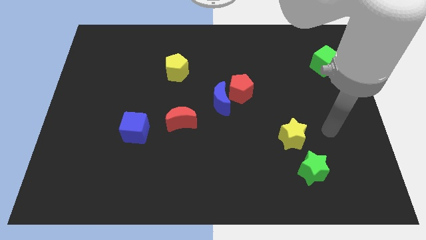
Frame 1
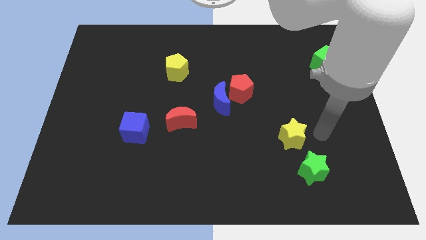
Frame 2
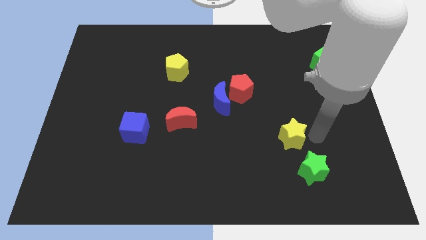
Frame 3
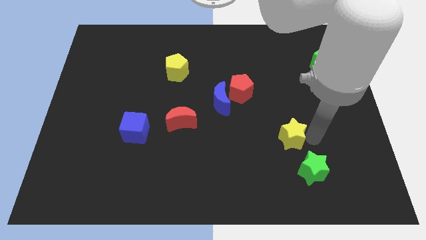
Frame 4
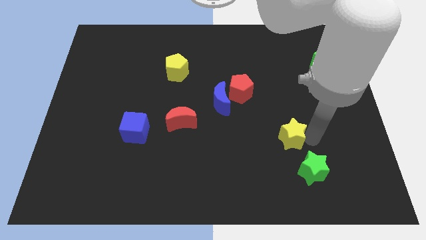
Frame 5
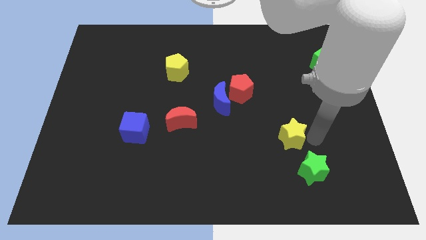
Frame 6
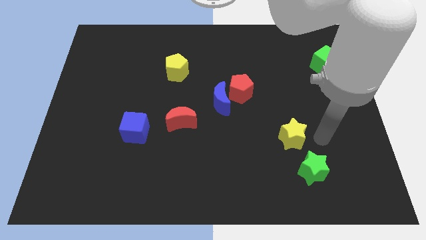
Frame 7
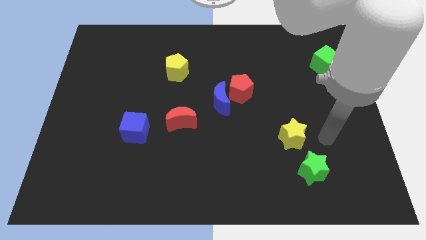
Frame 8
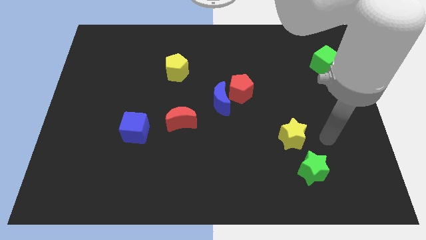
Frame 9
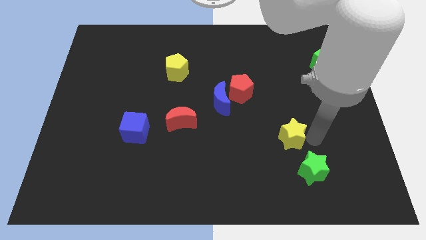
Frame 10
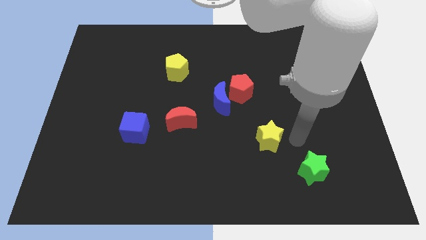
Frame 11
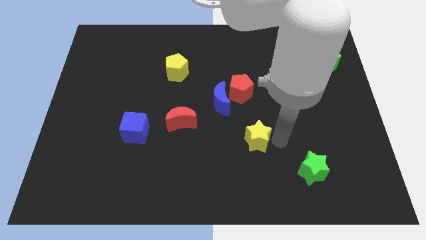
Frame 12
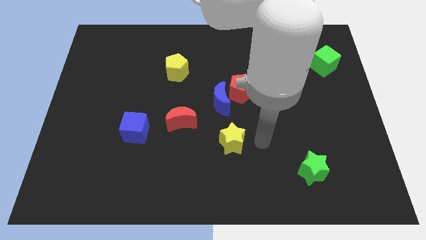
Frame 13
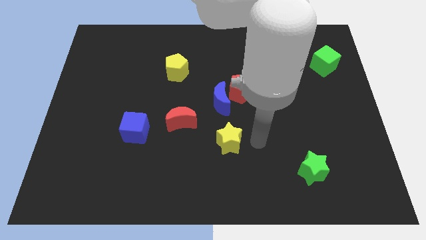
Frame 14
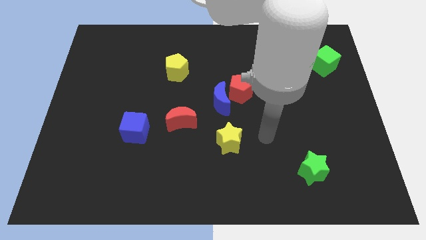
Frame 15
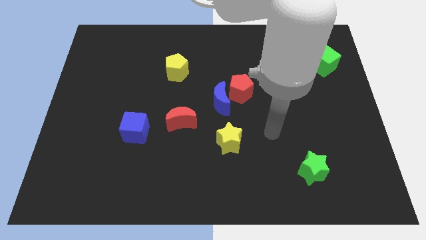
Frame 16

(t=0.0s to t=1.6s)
push the yellow star to the bottom center of the board

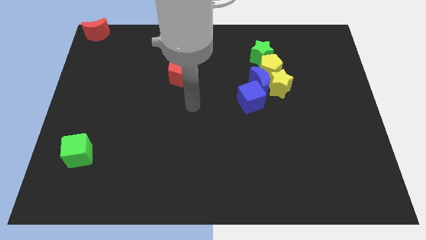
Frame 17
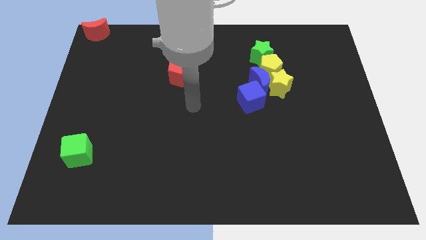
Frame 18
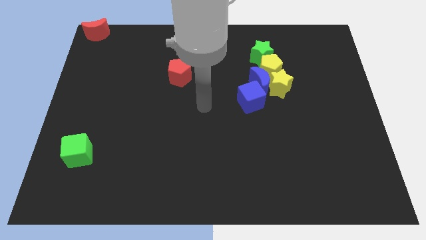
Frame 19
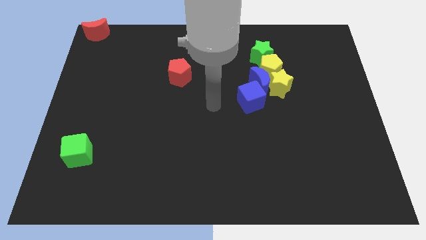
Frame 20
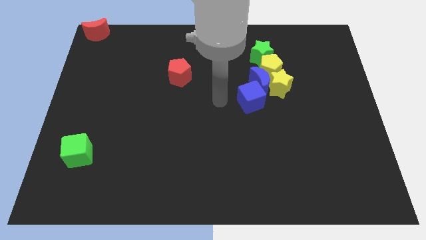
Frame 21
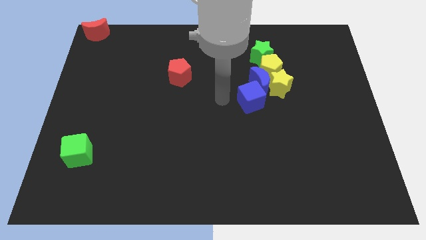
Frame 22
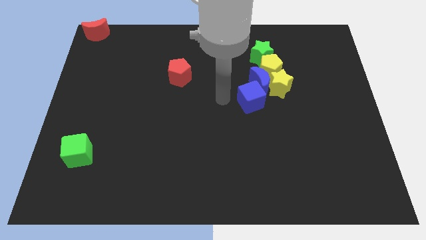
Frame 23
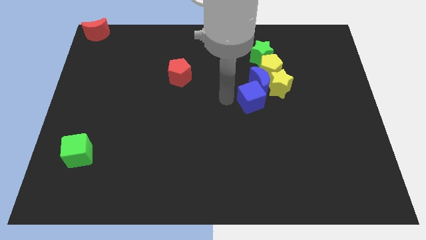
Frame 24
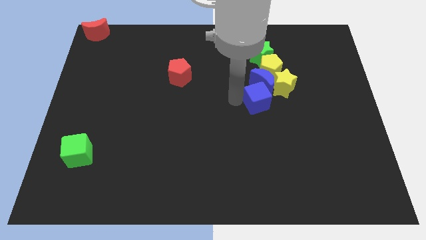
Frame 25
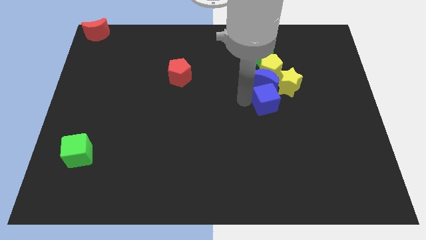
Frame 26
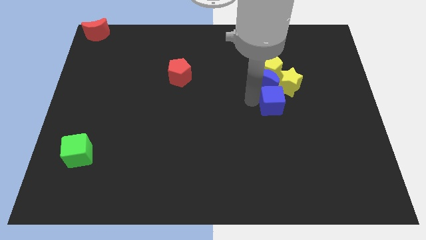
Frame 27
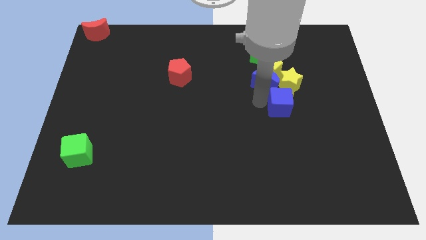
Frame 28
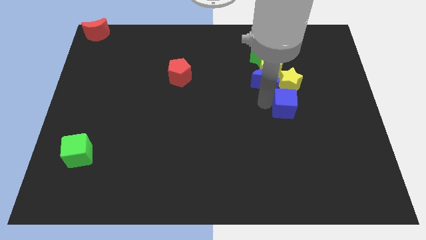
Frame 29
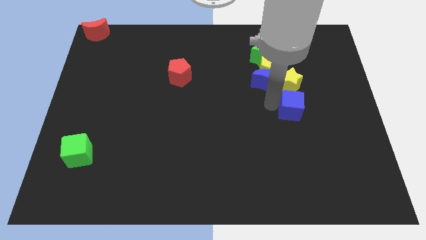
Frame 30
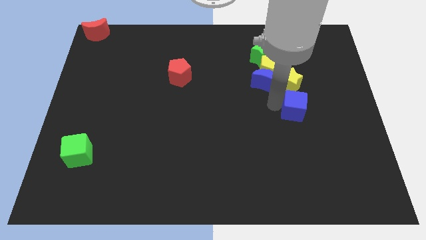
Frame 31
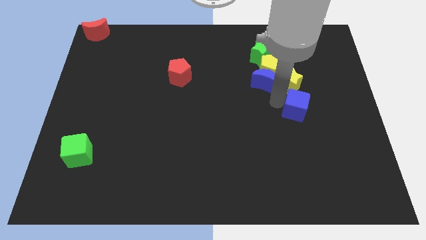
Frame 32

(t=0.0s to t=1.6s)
move the blue cube slightly away from the blue moon

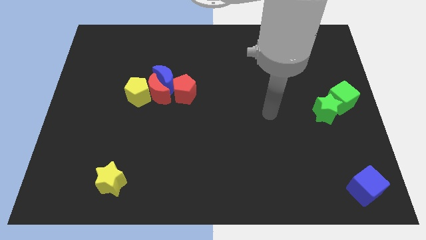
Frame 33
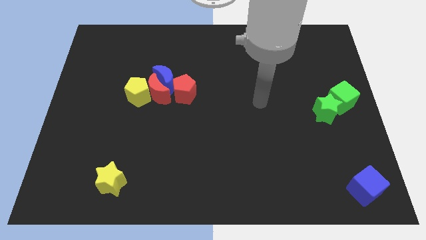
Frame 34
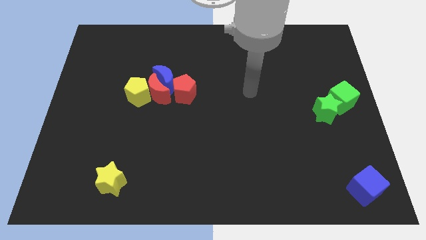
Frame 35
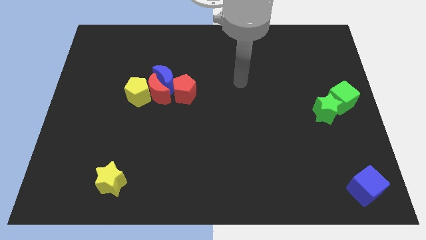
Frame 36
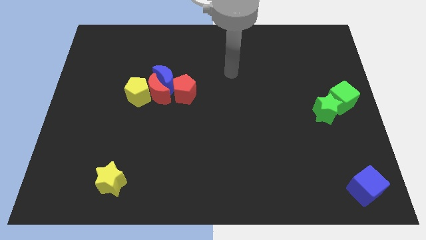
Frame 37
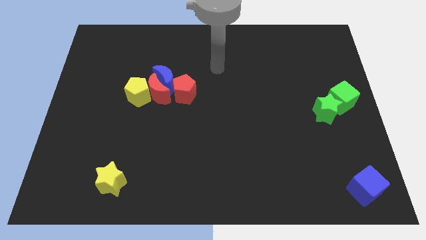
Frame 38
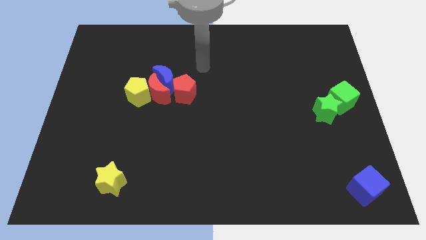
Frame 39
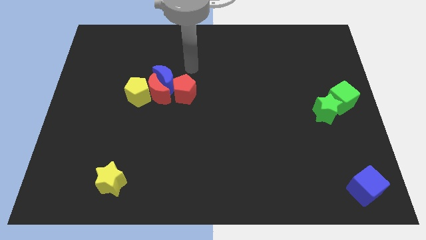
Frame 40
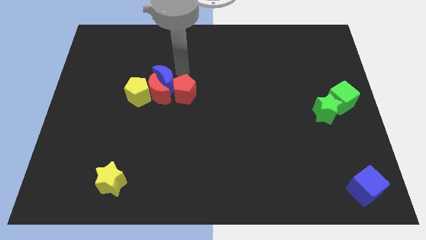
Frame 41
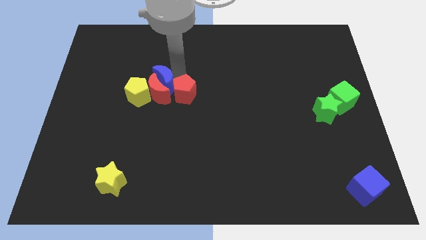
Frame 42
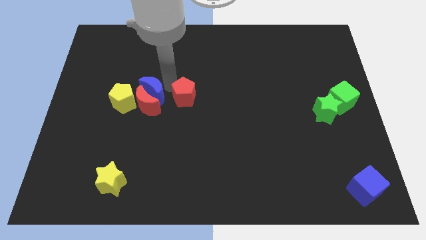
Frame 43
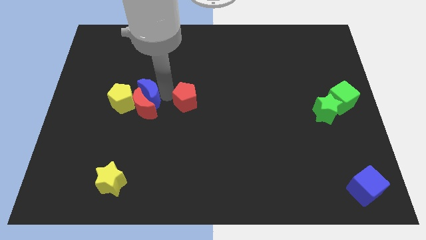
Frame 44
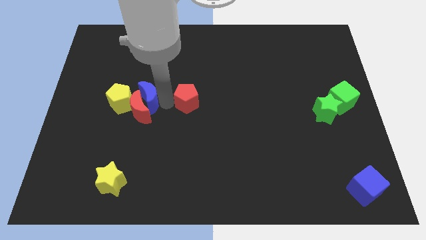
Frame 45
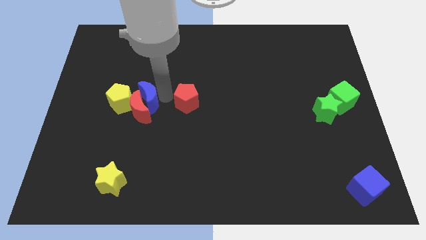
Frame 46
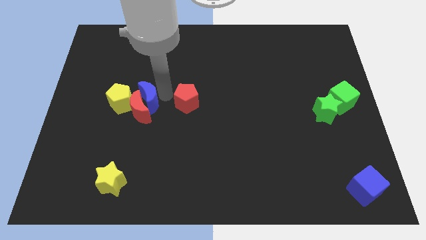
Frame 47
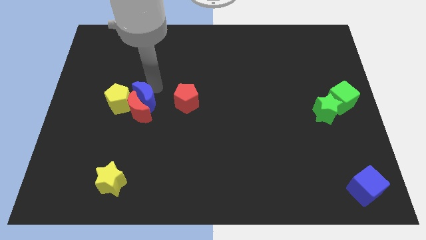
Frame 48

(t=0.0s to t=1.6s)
separate the red pentagon from blue crescent

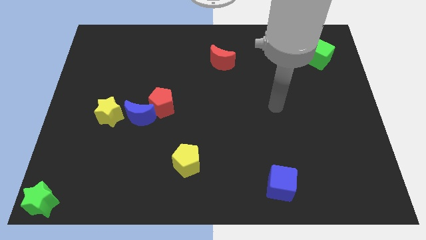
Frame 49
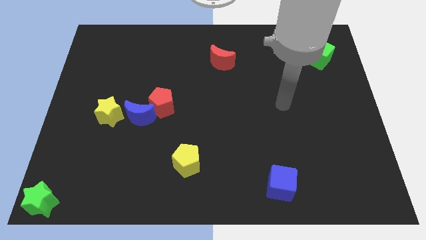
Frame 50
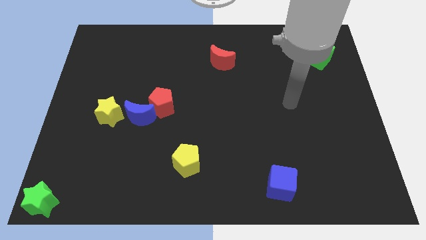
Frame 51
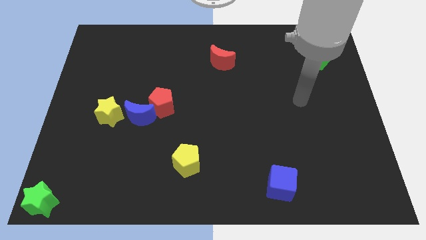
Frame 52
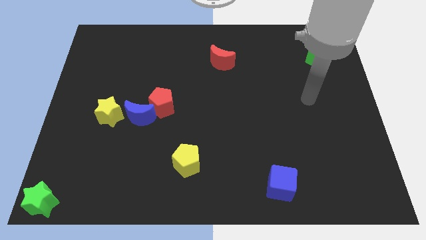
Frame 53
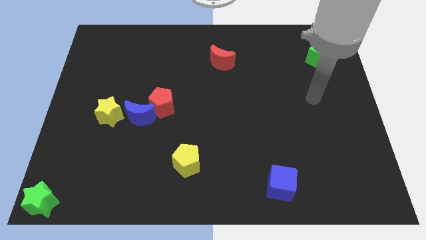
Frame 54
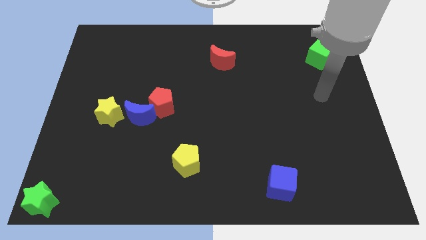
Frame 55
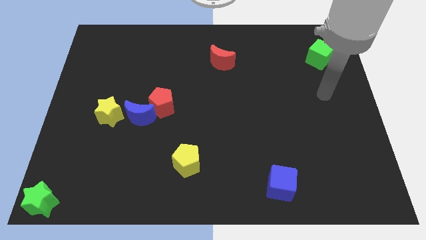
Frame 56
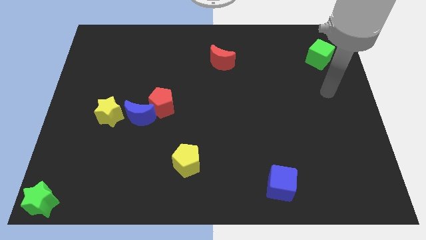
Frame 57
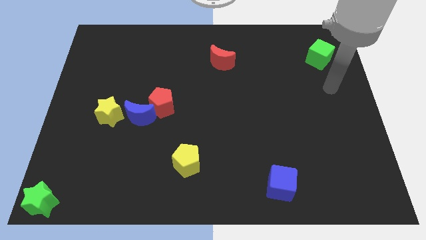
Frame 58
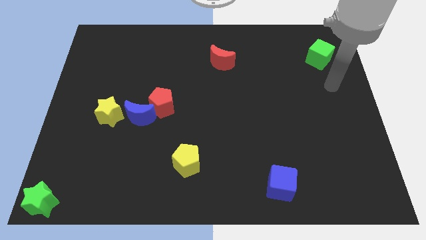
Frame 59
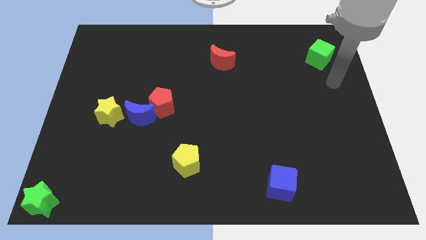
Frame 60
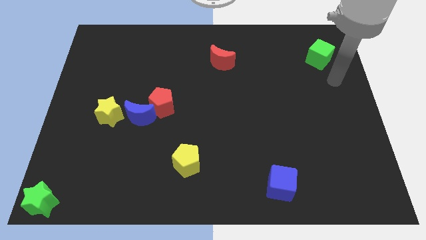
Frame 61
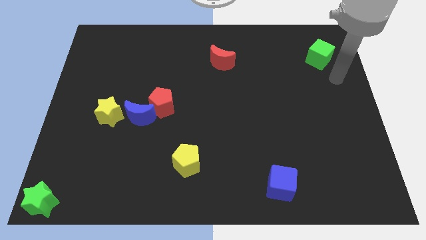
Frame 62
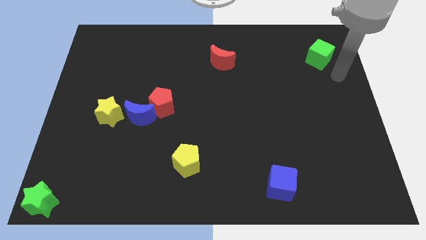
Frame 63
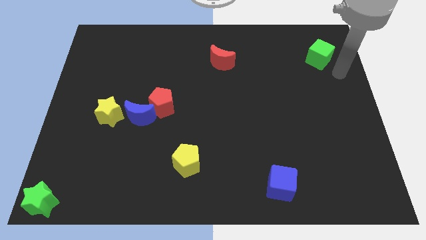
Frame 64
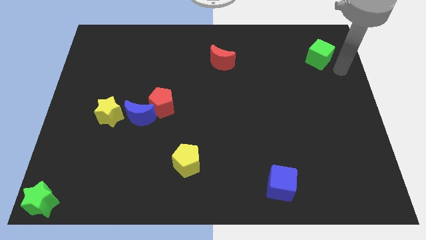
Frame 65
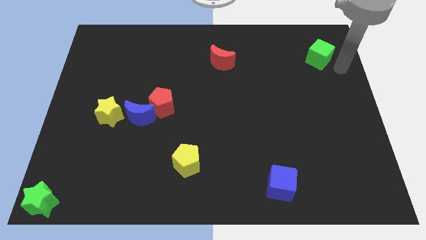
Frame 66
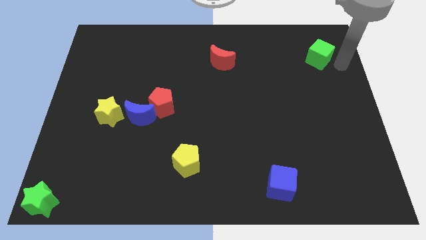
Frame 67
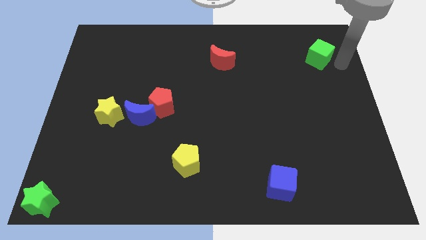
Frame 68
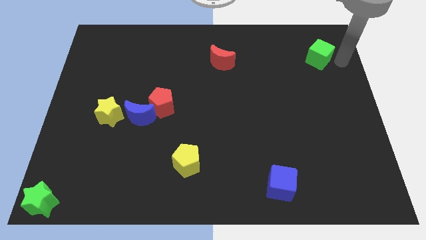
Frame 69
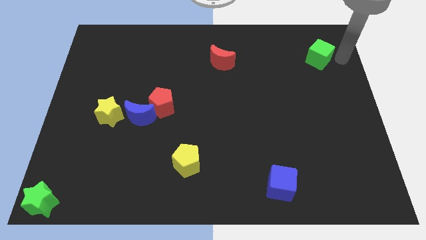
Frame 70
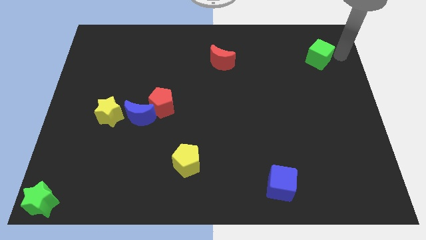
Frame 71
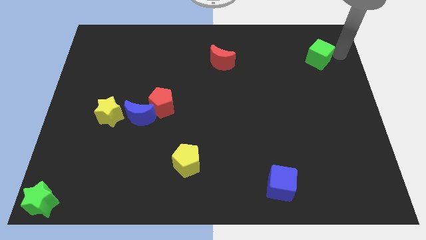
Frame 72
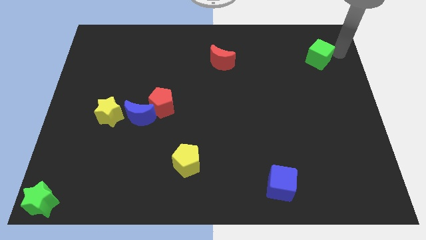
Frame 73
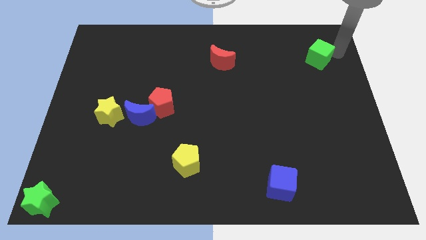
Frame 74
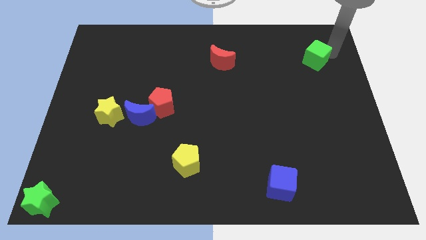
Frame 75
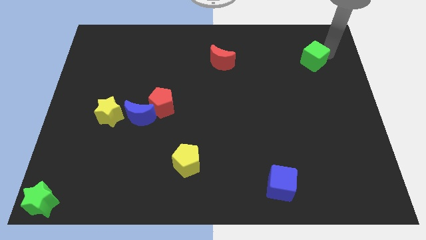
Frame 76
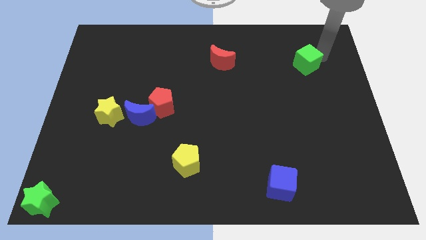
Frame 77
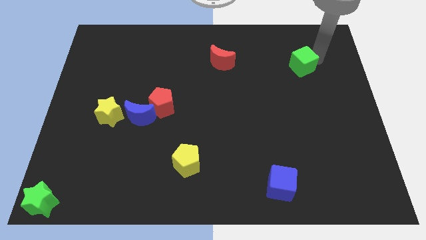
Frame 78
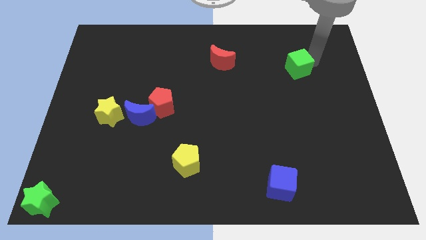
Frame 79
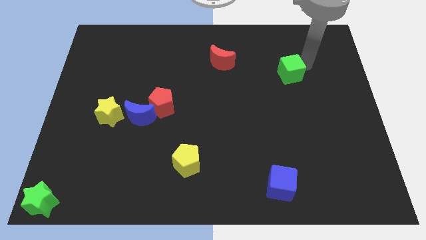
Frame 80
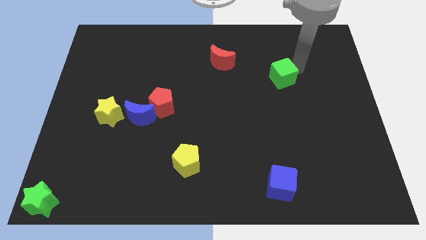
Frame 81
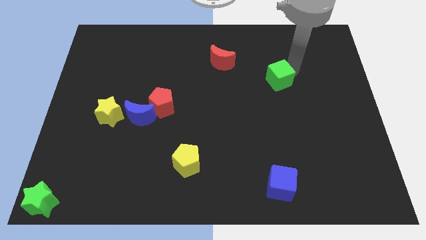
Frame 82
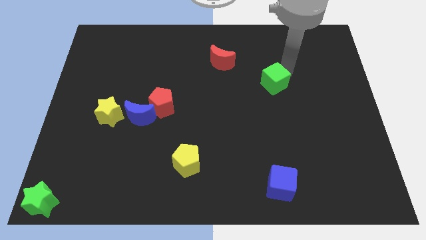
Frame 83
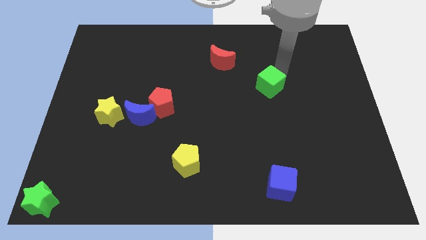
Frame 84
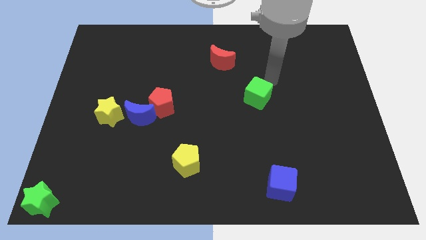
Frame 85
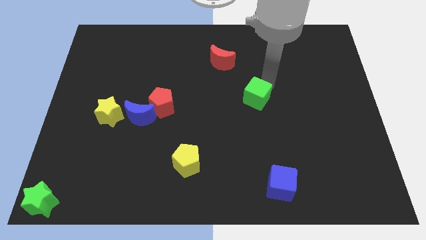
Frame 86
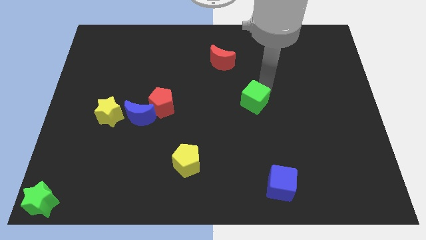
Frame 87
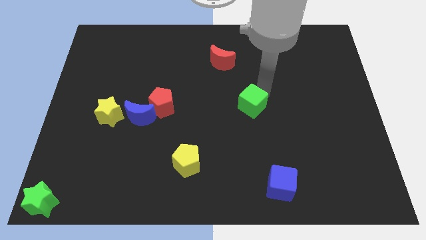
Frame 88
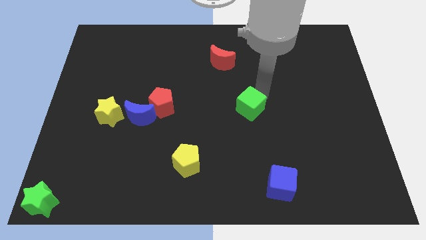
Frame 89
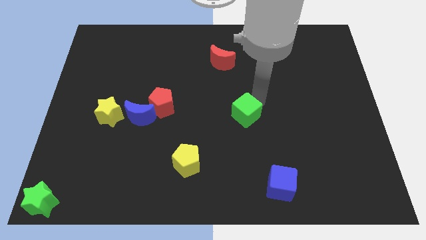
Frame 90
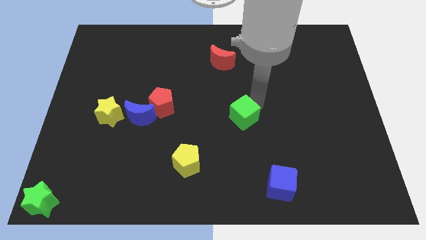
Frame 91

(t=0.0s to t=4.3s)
move the green cube towards the center of the board
